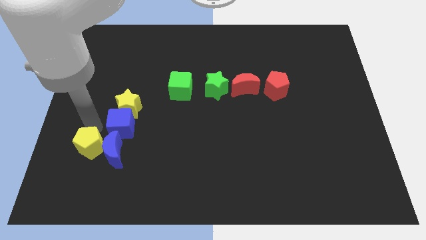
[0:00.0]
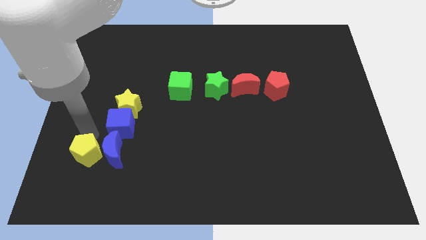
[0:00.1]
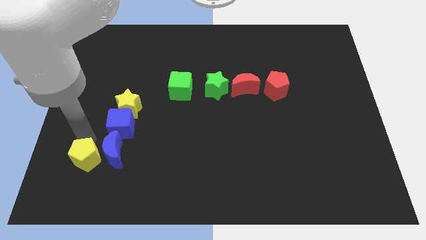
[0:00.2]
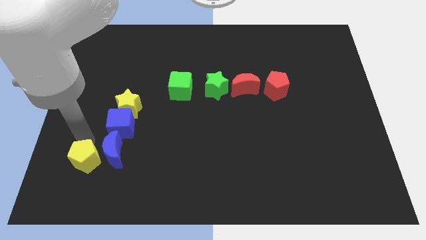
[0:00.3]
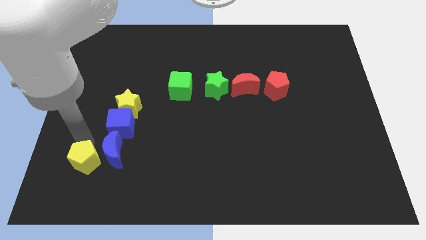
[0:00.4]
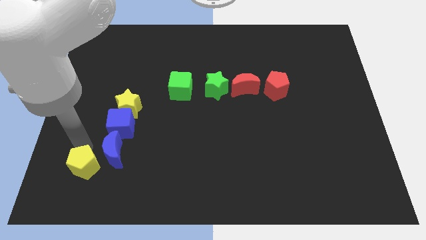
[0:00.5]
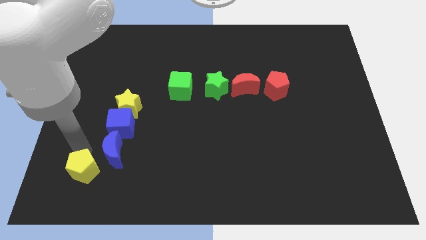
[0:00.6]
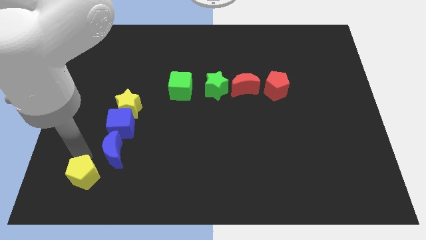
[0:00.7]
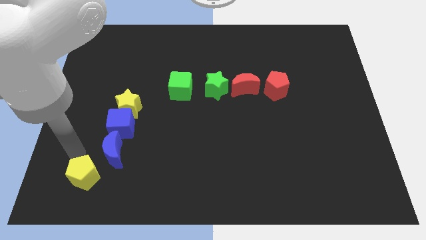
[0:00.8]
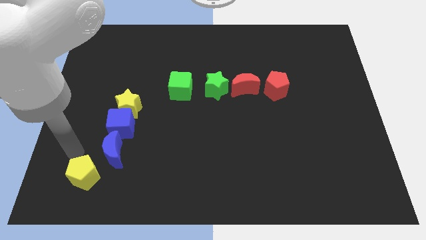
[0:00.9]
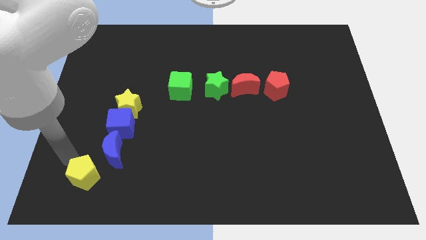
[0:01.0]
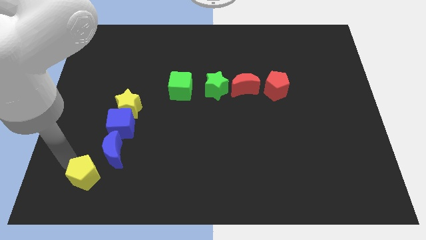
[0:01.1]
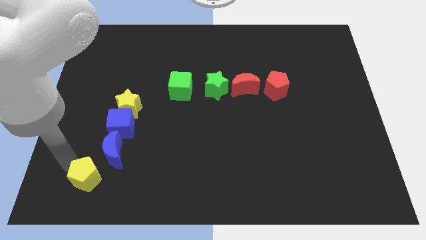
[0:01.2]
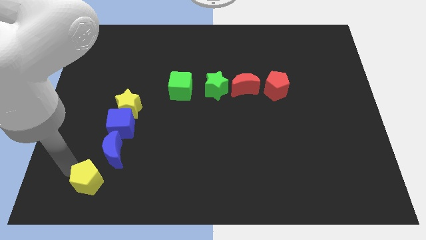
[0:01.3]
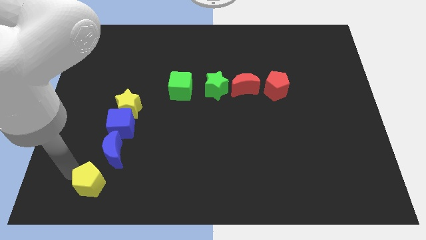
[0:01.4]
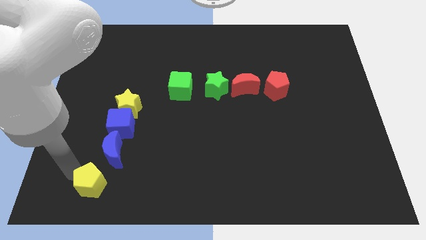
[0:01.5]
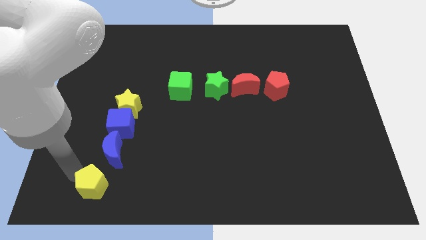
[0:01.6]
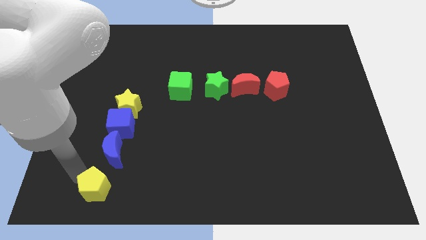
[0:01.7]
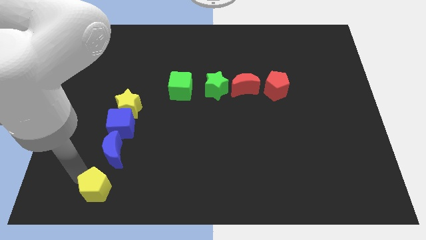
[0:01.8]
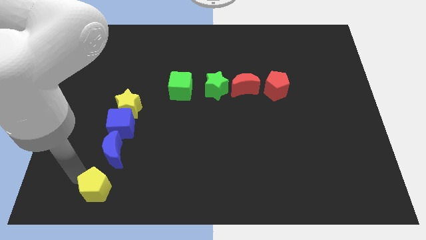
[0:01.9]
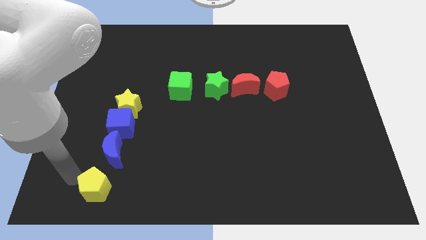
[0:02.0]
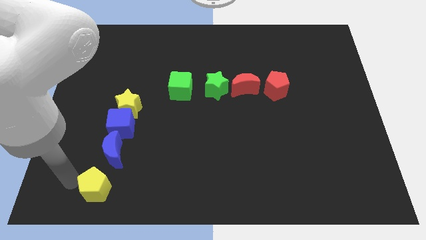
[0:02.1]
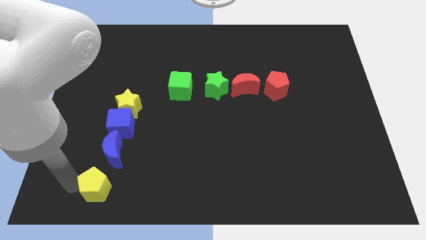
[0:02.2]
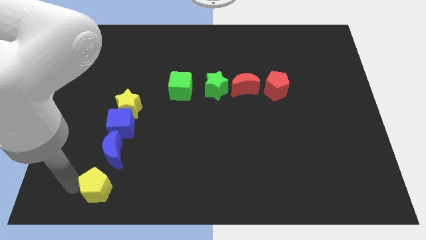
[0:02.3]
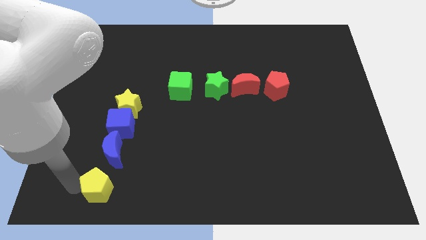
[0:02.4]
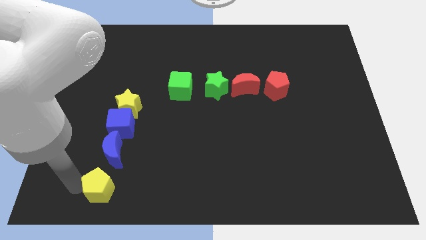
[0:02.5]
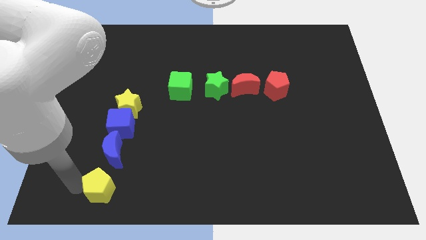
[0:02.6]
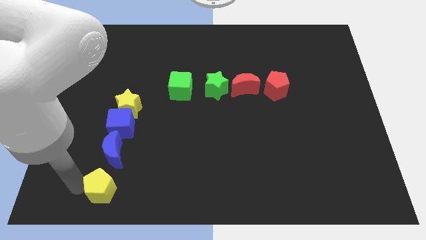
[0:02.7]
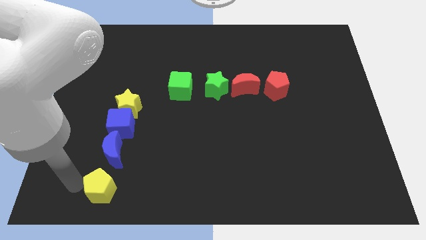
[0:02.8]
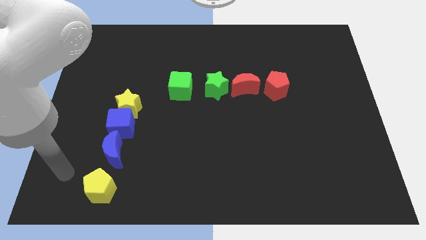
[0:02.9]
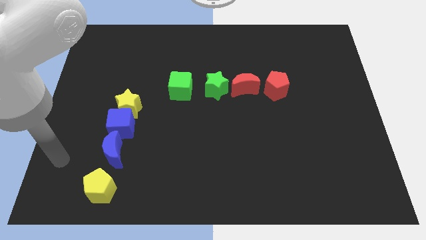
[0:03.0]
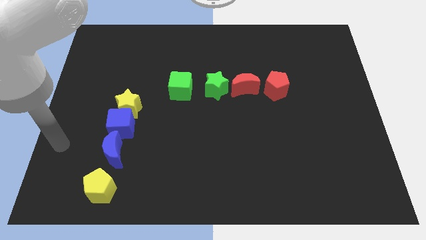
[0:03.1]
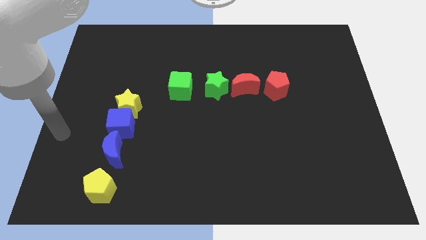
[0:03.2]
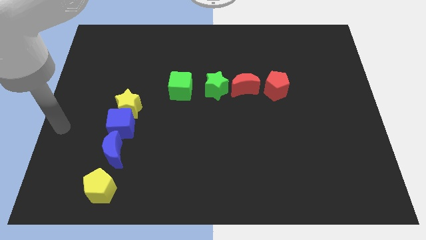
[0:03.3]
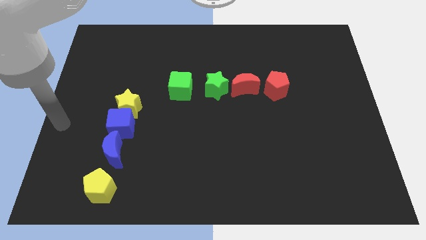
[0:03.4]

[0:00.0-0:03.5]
put the yellow pentagon vertically below the blue crescent

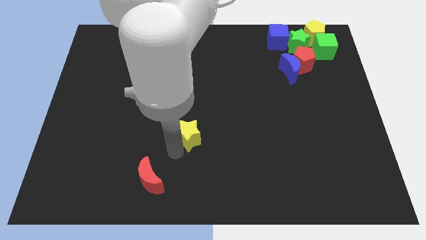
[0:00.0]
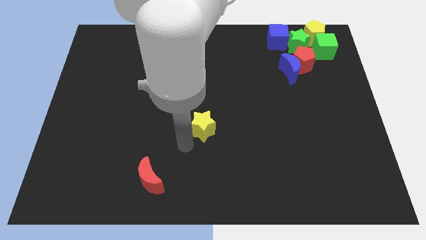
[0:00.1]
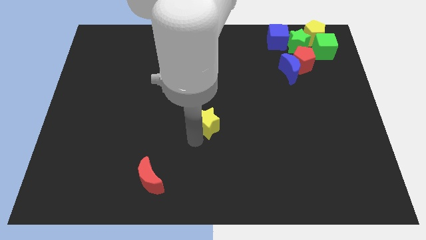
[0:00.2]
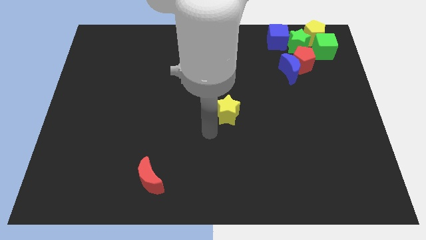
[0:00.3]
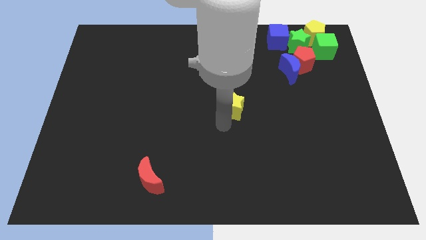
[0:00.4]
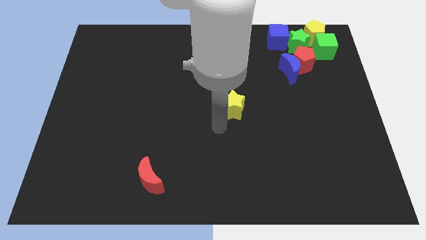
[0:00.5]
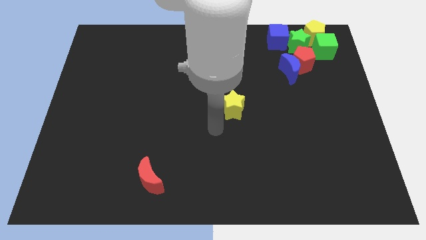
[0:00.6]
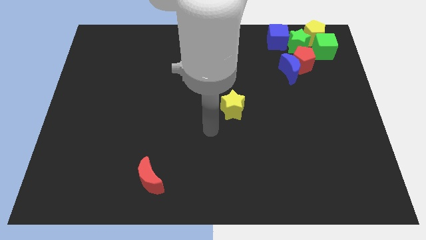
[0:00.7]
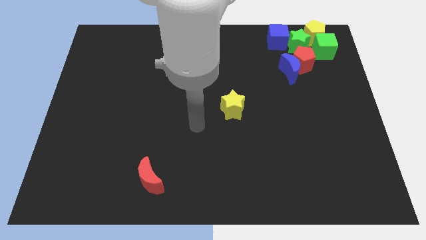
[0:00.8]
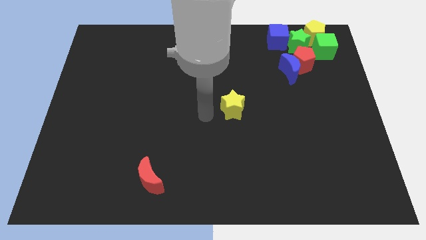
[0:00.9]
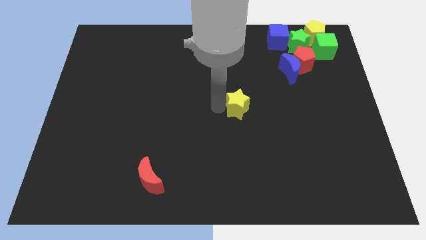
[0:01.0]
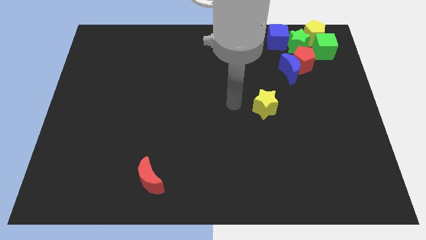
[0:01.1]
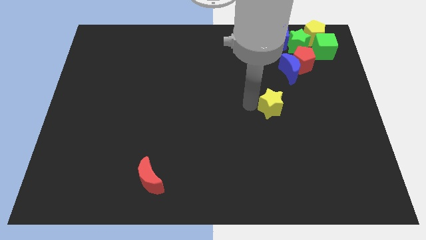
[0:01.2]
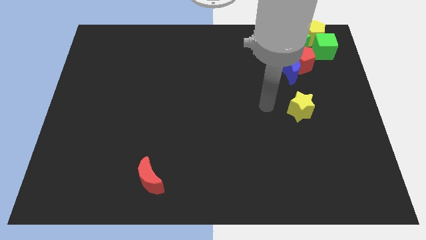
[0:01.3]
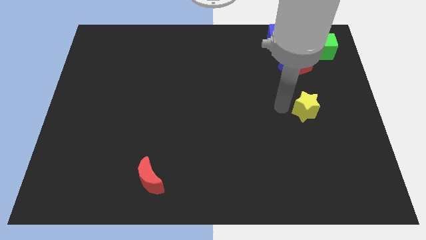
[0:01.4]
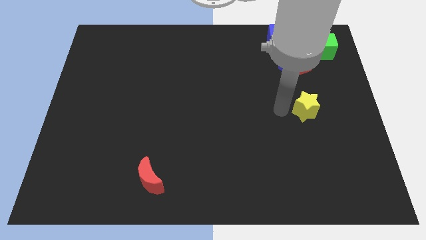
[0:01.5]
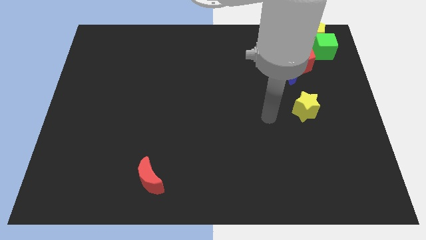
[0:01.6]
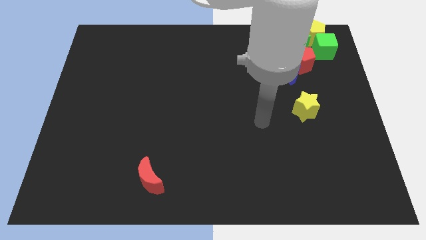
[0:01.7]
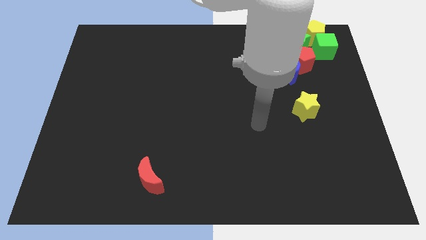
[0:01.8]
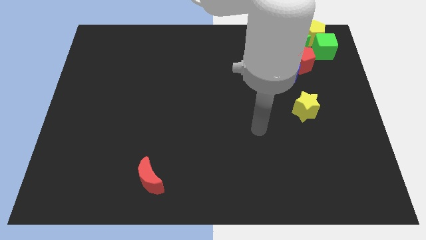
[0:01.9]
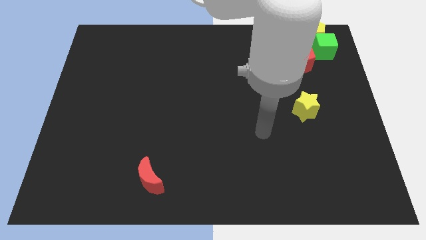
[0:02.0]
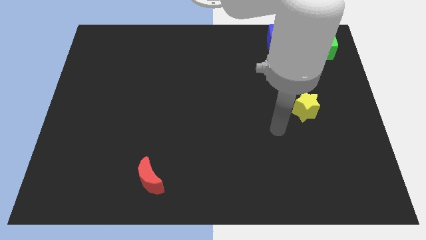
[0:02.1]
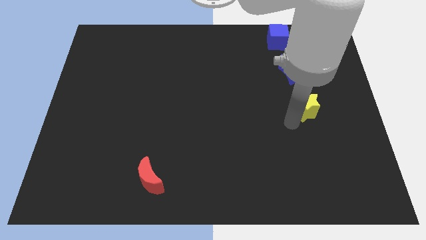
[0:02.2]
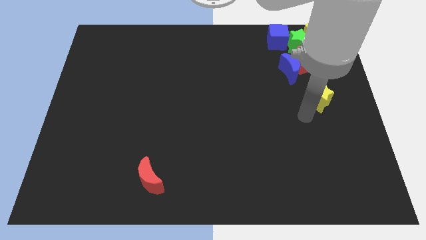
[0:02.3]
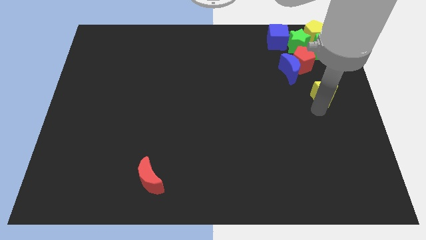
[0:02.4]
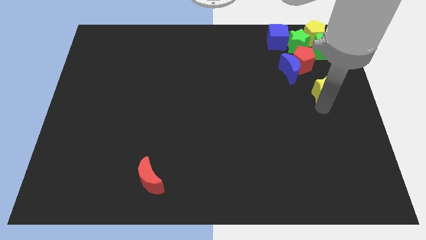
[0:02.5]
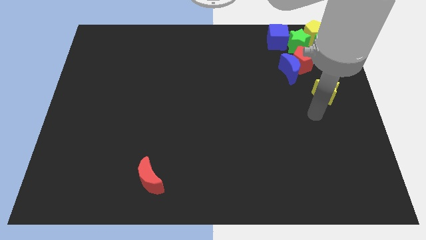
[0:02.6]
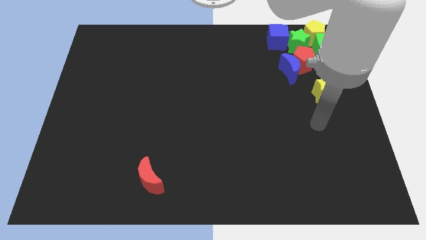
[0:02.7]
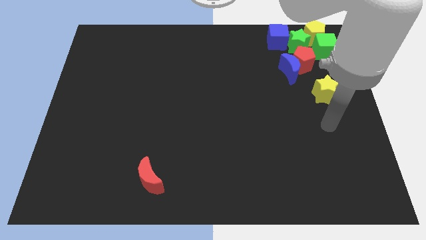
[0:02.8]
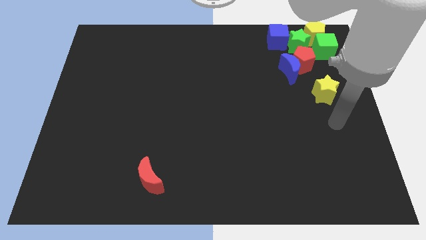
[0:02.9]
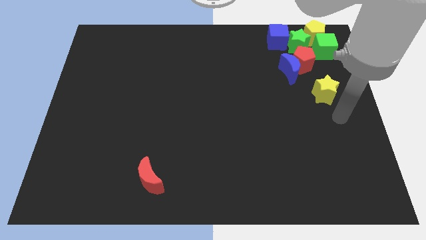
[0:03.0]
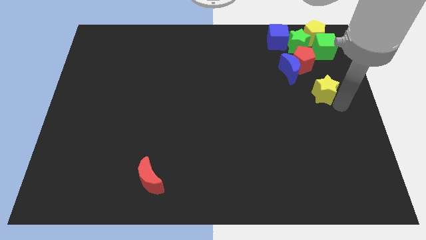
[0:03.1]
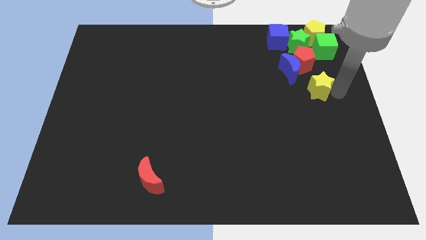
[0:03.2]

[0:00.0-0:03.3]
slide the yellow star vertical to the bottom right side of the red pentagon

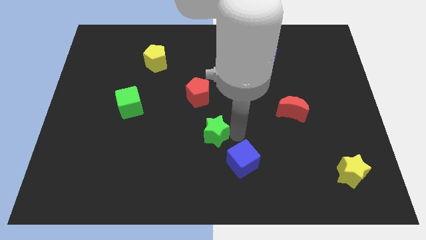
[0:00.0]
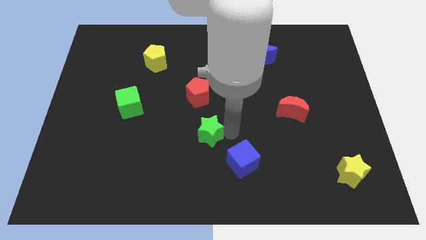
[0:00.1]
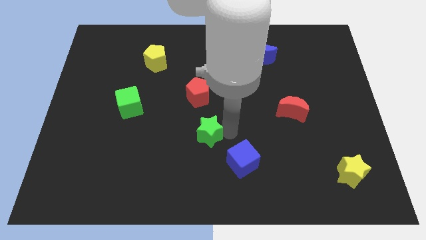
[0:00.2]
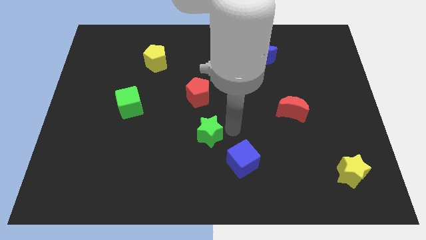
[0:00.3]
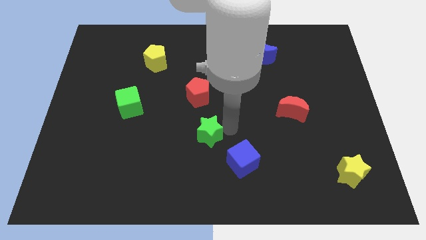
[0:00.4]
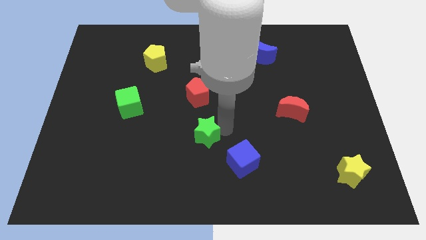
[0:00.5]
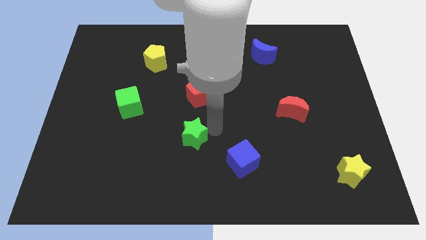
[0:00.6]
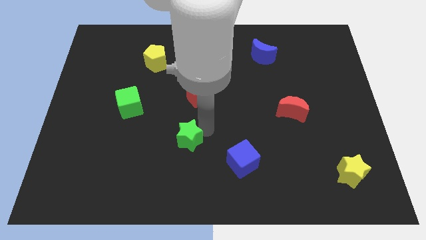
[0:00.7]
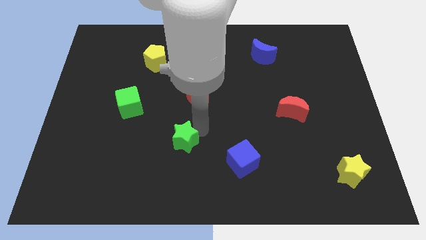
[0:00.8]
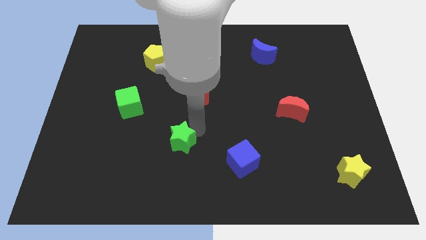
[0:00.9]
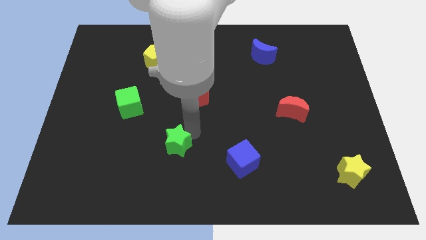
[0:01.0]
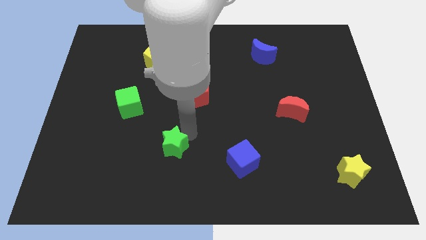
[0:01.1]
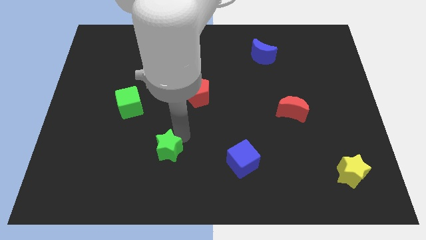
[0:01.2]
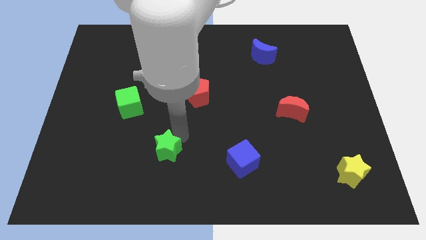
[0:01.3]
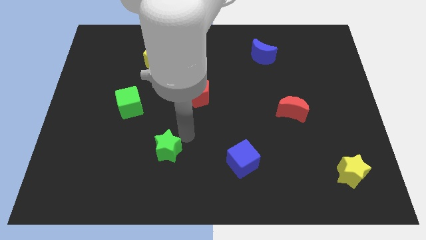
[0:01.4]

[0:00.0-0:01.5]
push the green star at the bottom center of the green cube and red pentagon

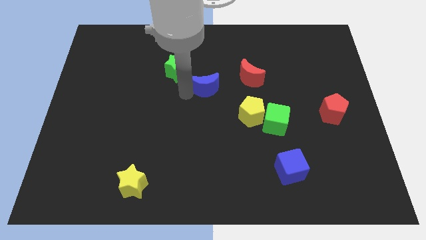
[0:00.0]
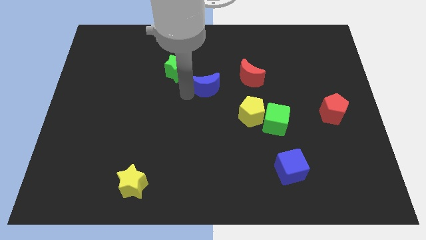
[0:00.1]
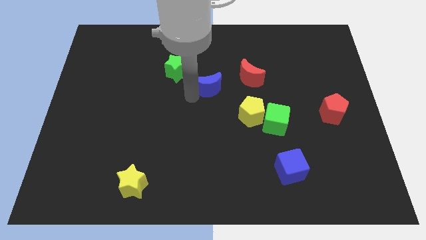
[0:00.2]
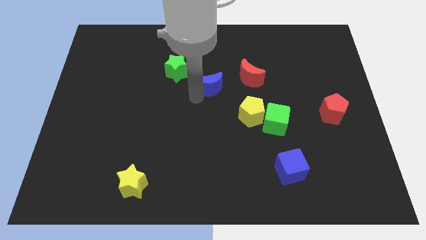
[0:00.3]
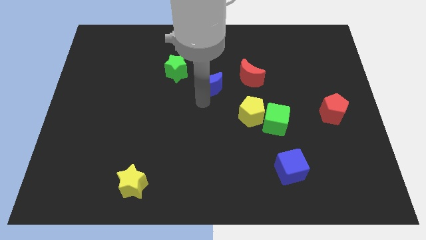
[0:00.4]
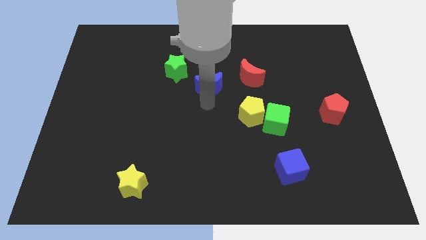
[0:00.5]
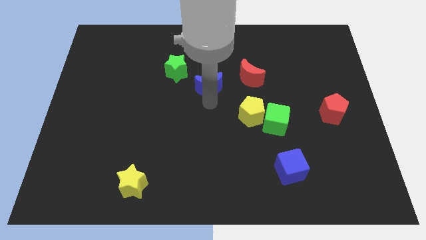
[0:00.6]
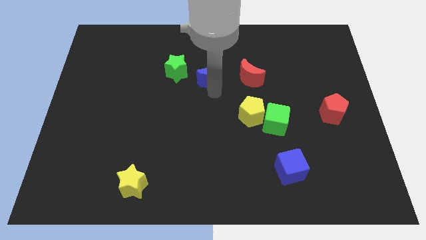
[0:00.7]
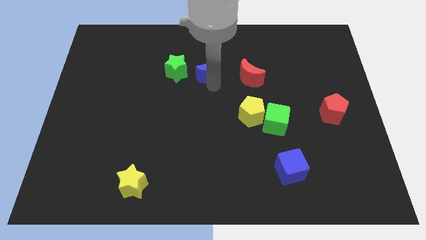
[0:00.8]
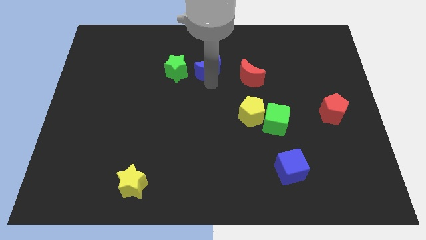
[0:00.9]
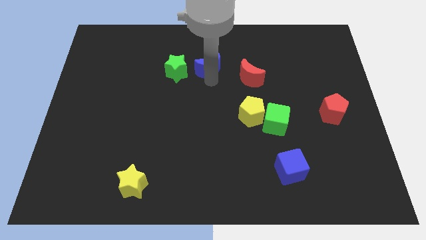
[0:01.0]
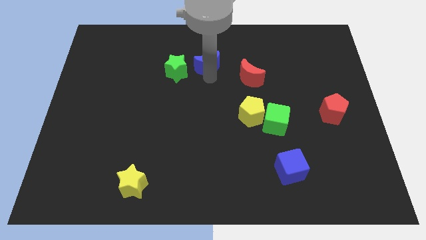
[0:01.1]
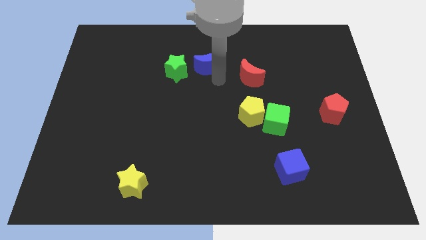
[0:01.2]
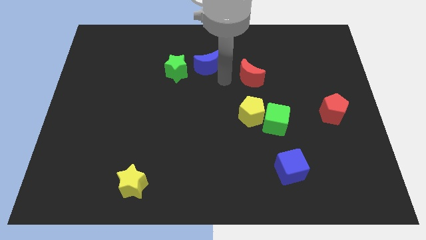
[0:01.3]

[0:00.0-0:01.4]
slightly push the blue moon upwards
